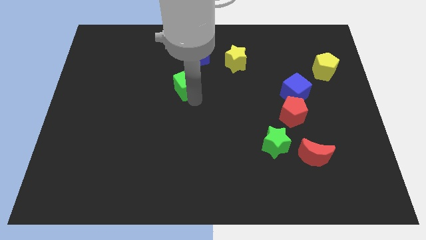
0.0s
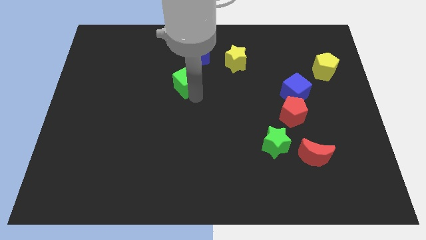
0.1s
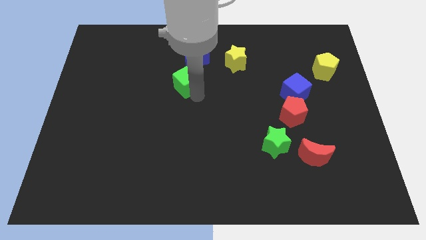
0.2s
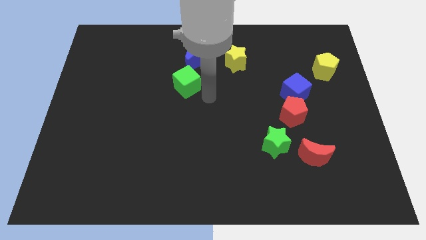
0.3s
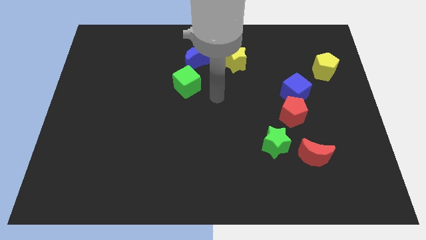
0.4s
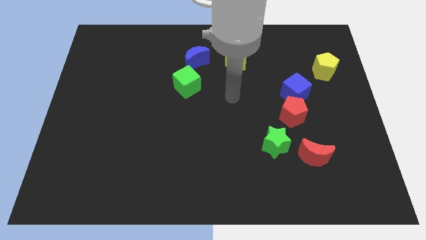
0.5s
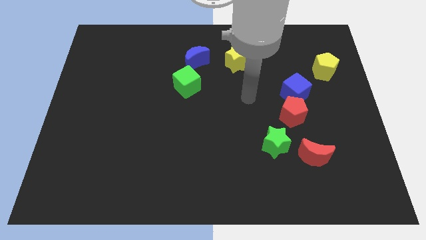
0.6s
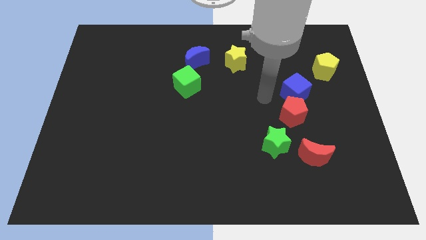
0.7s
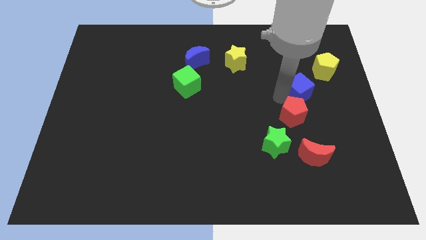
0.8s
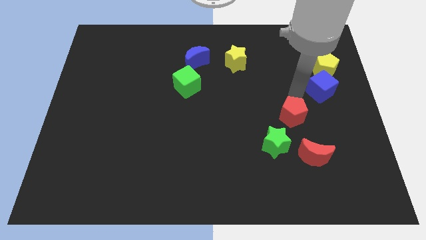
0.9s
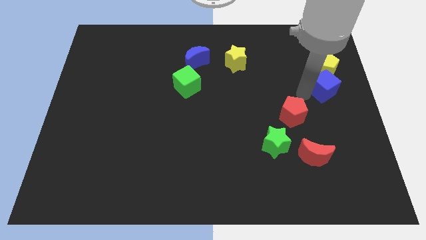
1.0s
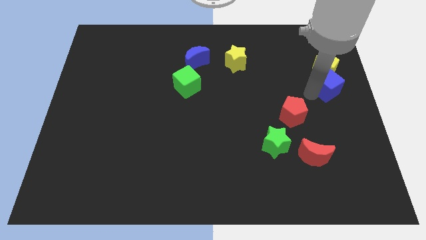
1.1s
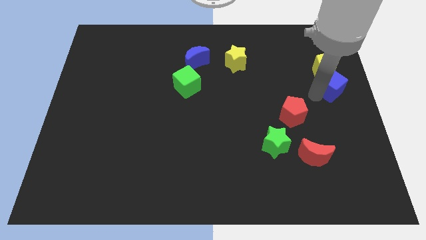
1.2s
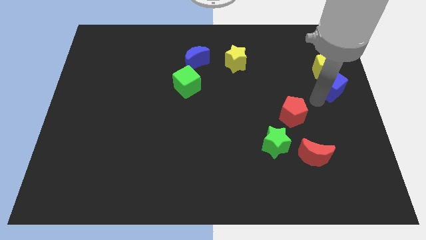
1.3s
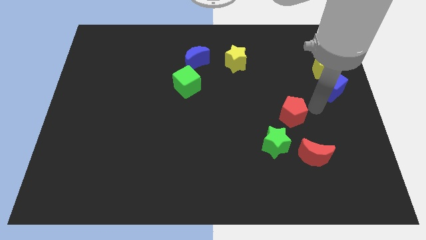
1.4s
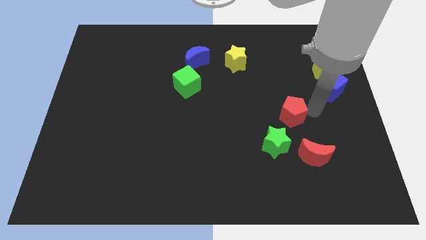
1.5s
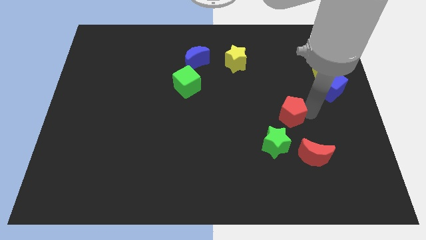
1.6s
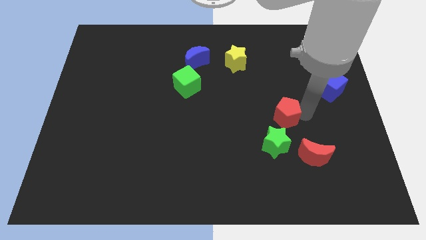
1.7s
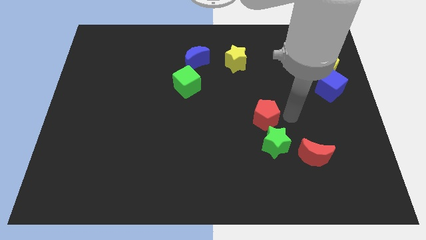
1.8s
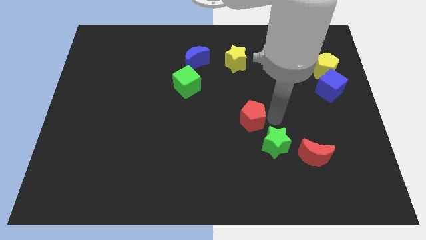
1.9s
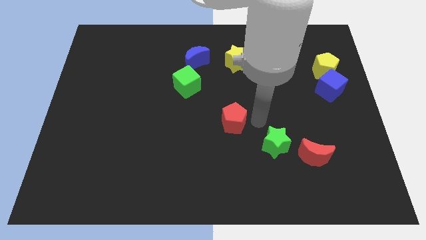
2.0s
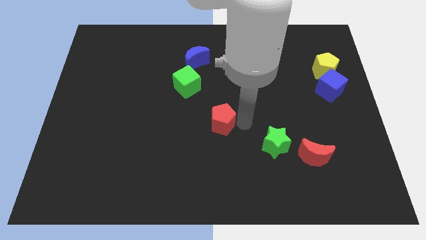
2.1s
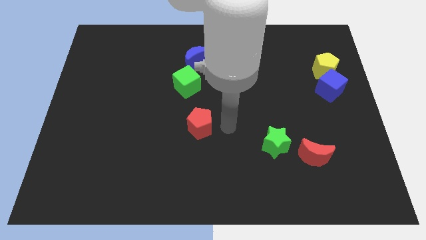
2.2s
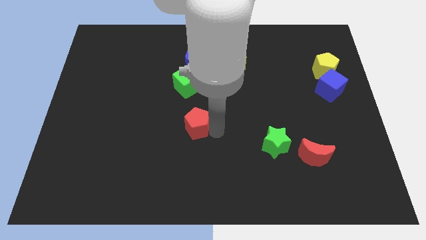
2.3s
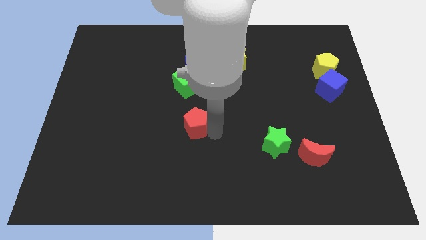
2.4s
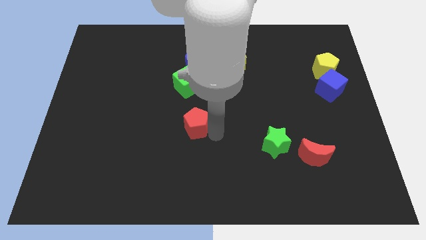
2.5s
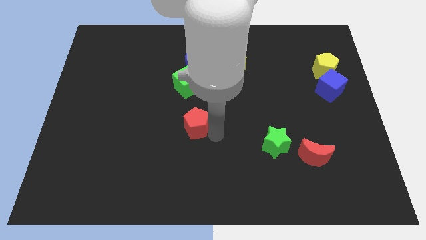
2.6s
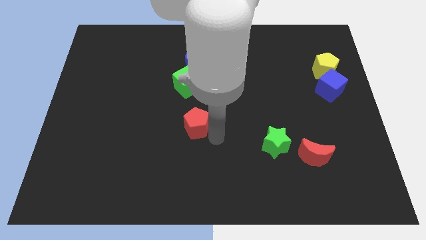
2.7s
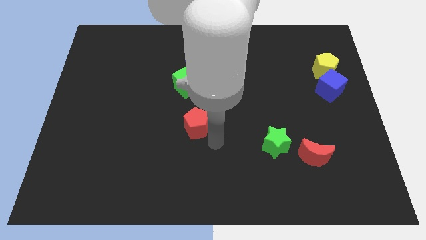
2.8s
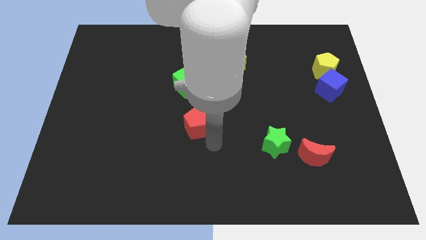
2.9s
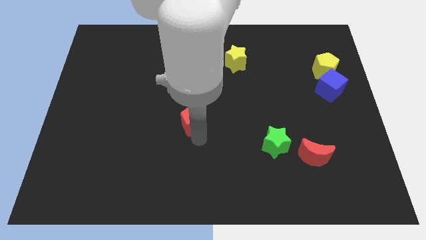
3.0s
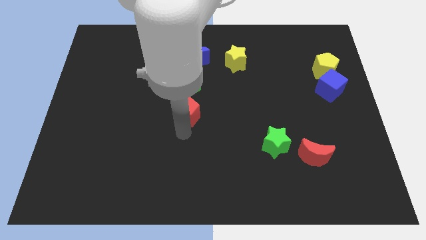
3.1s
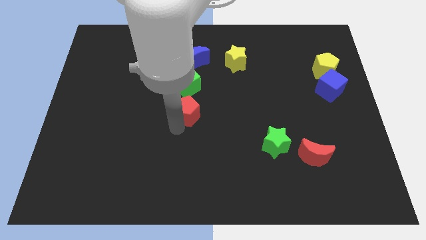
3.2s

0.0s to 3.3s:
place the red pentagon below the green cube

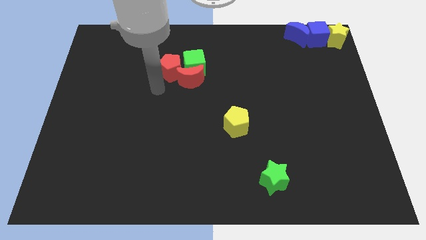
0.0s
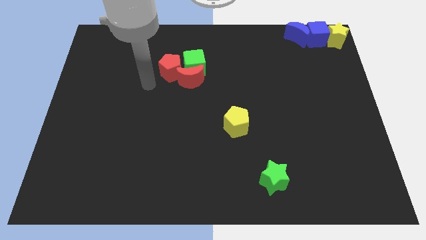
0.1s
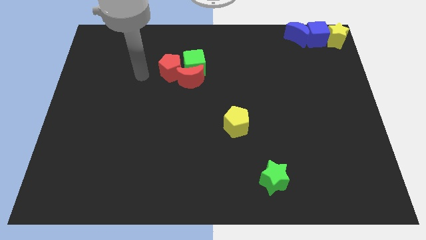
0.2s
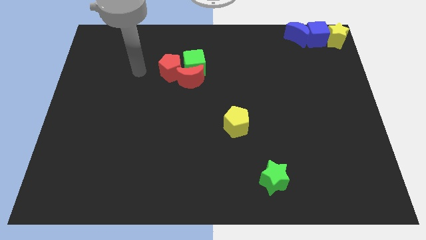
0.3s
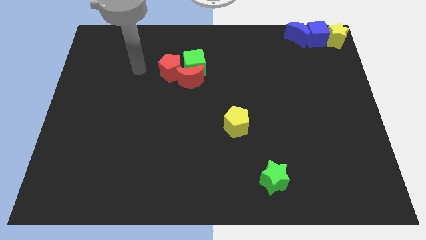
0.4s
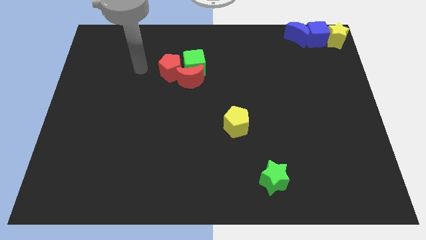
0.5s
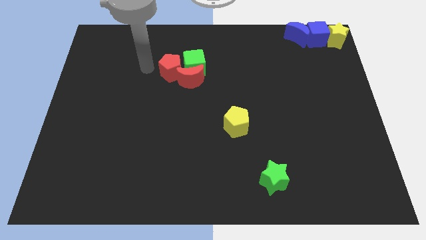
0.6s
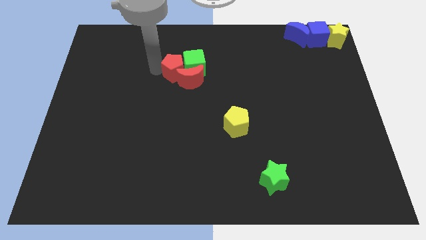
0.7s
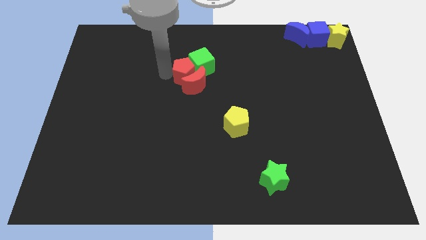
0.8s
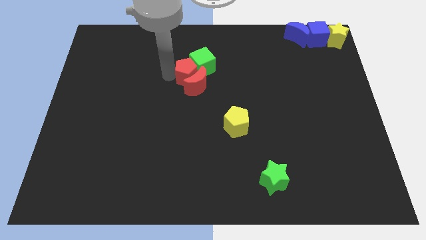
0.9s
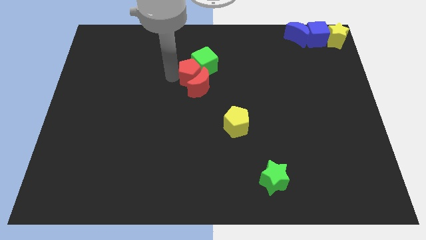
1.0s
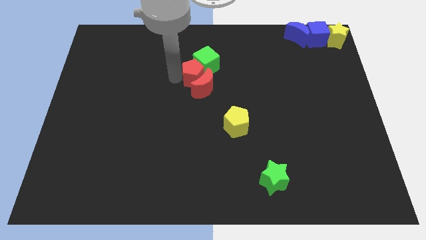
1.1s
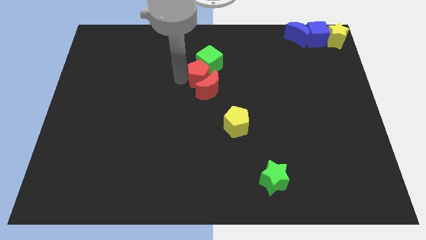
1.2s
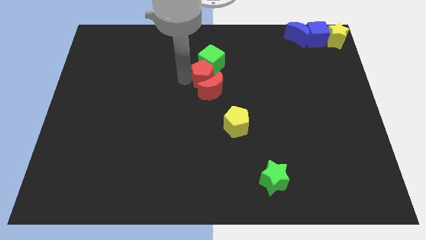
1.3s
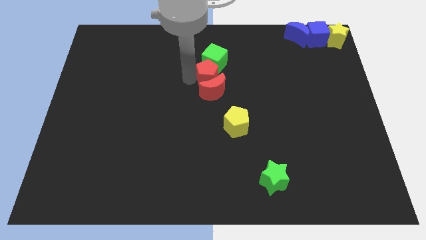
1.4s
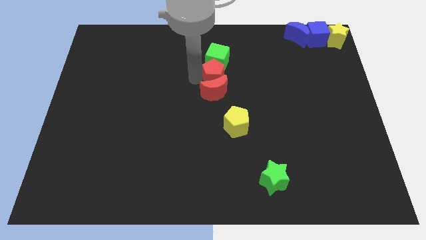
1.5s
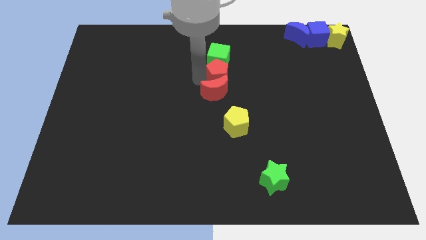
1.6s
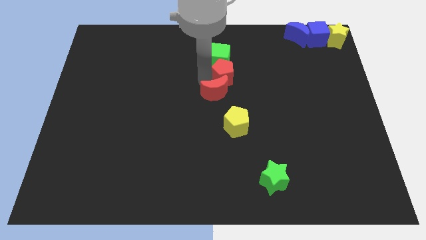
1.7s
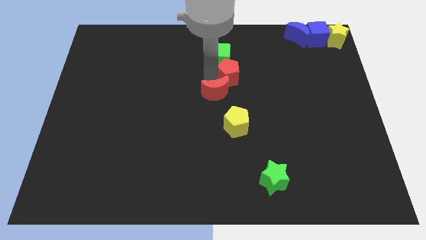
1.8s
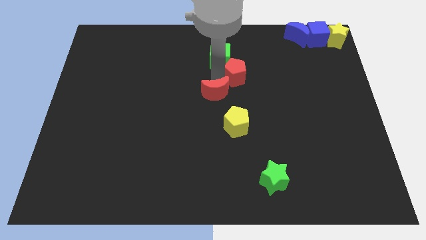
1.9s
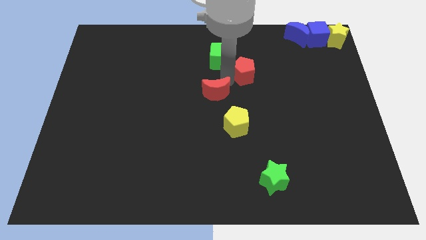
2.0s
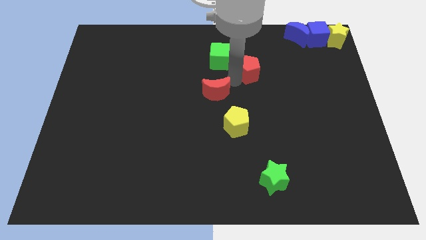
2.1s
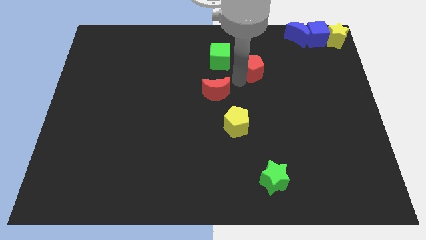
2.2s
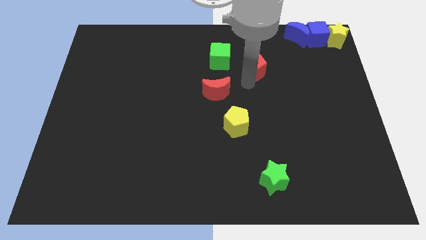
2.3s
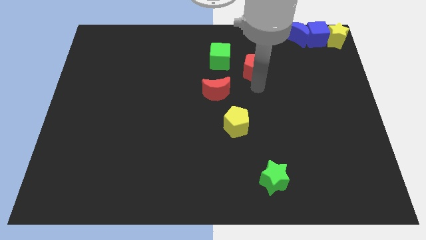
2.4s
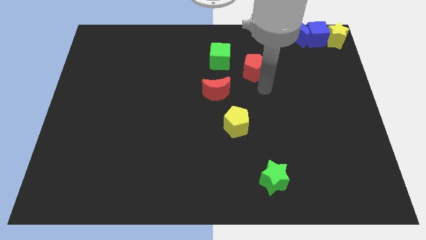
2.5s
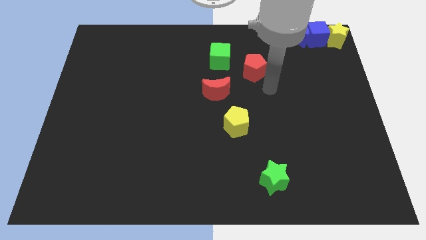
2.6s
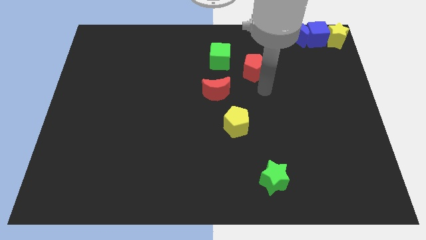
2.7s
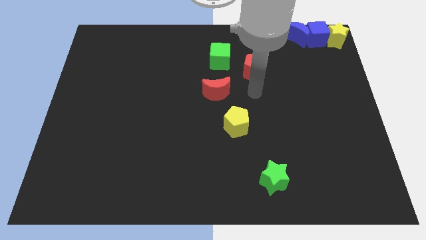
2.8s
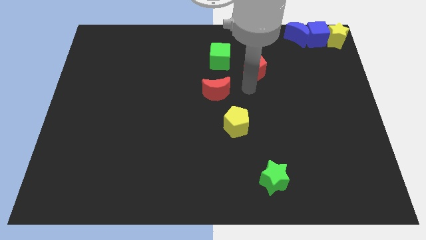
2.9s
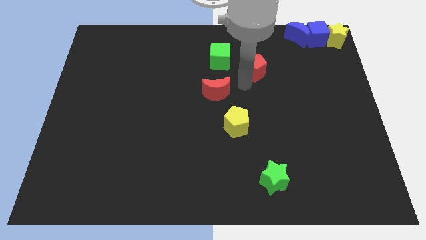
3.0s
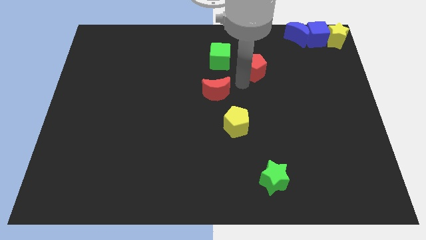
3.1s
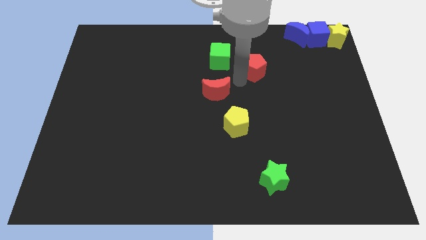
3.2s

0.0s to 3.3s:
move the red pentagon to the bottom right of the green cube

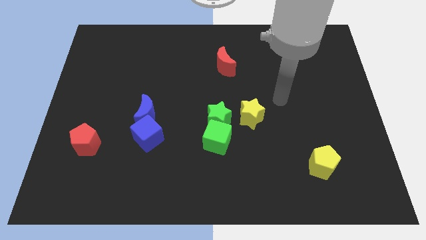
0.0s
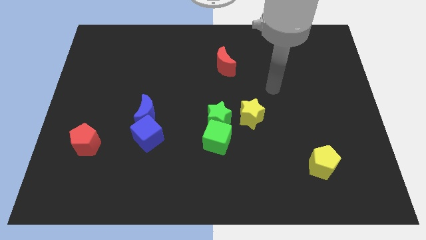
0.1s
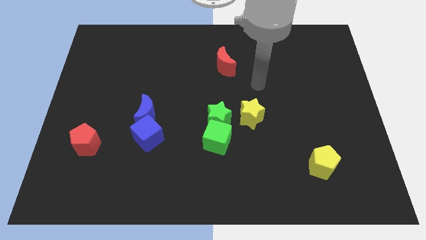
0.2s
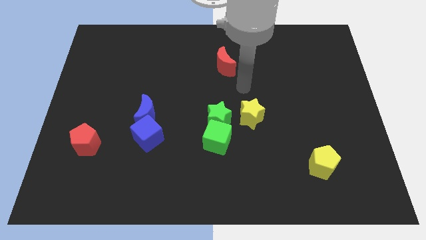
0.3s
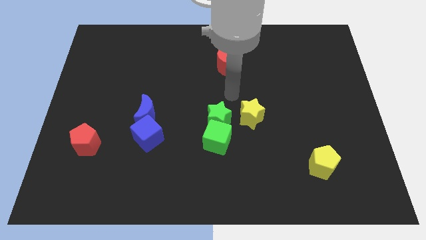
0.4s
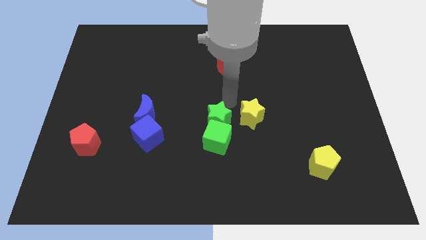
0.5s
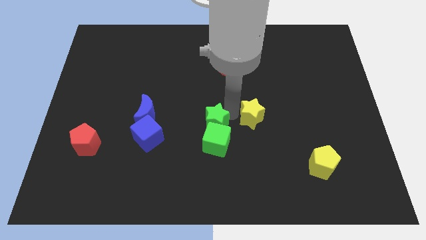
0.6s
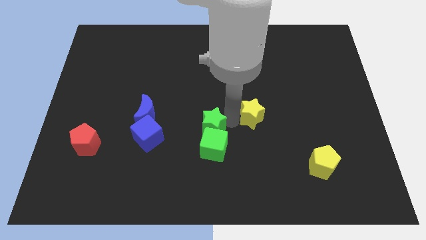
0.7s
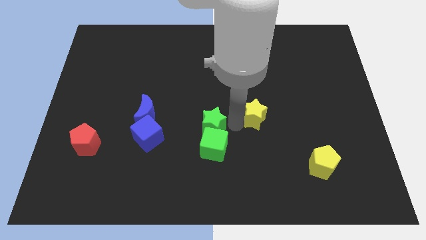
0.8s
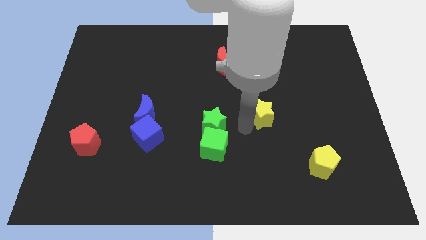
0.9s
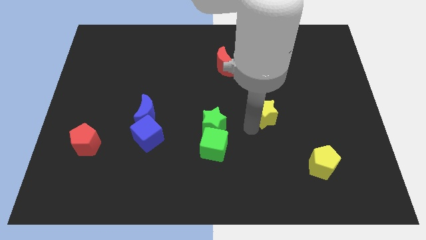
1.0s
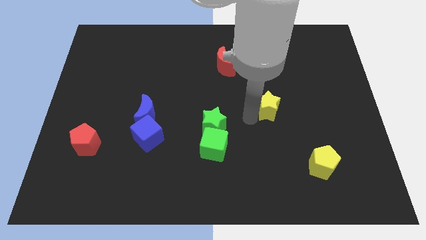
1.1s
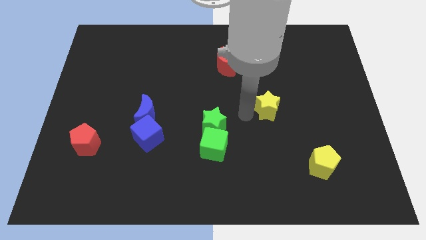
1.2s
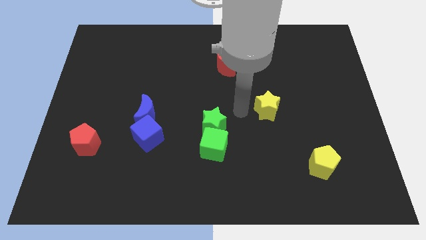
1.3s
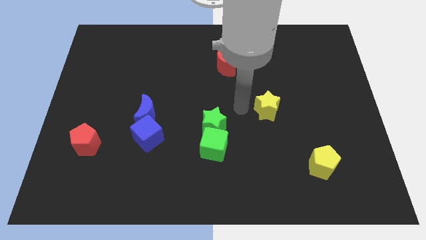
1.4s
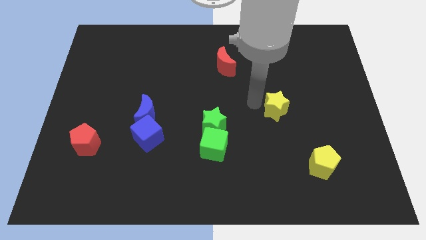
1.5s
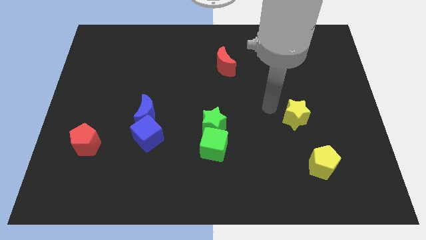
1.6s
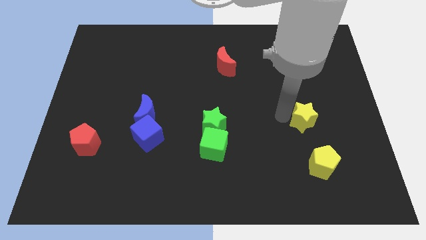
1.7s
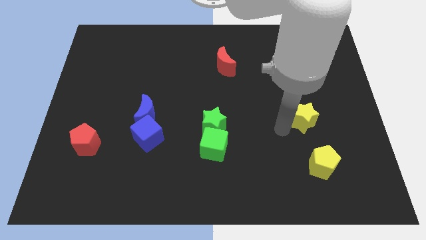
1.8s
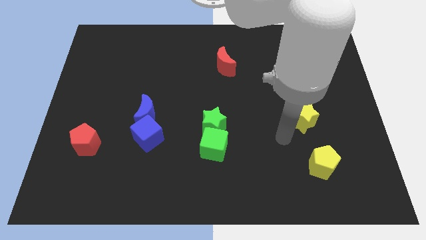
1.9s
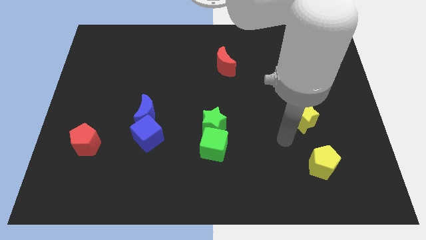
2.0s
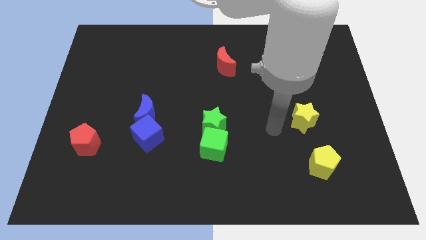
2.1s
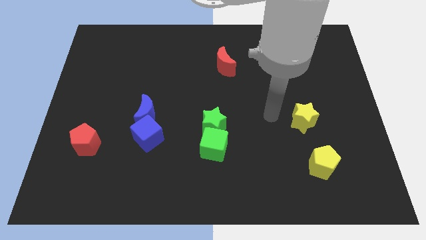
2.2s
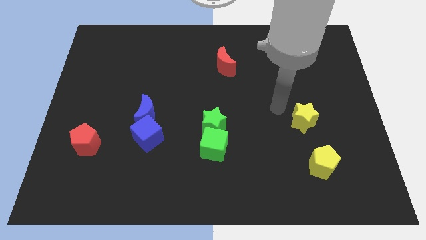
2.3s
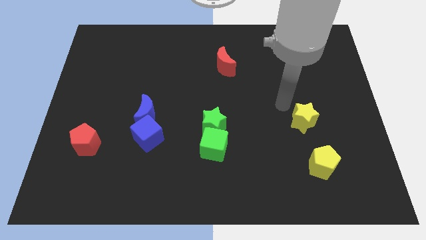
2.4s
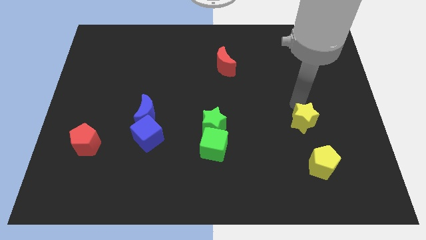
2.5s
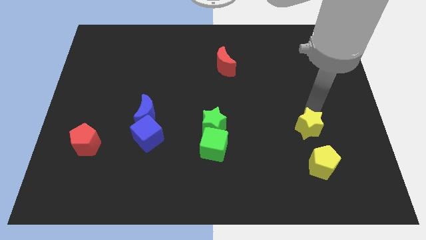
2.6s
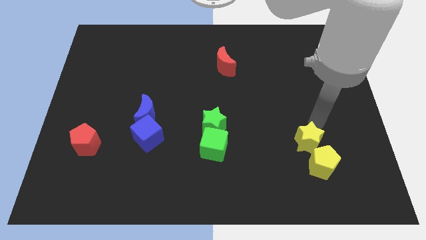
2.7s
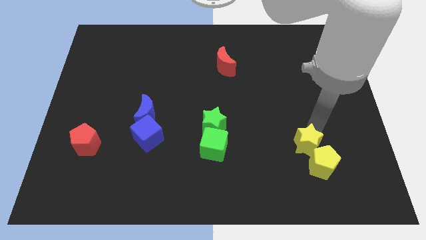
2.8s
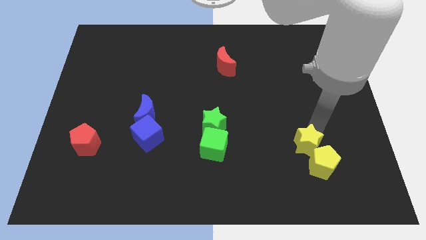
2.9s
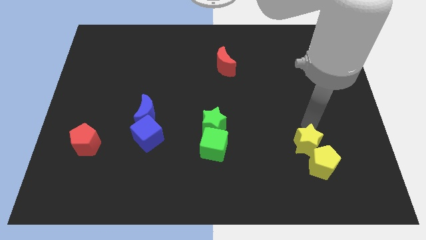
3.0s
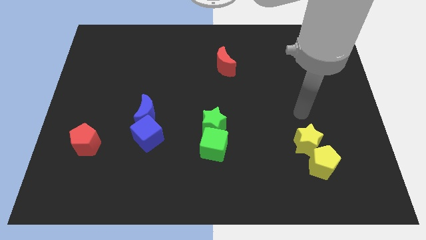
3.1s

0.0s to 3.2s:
move the yellow star towards the top left side of the yellow pentagon
